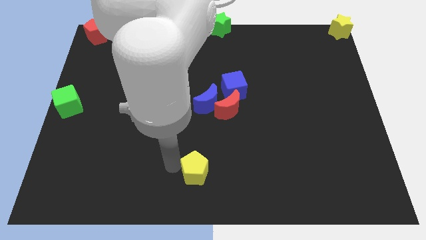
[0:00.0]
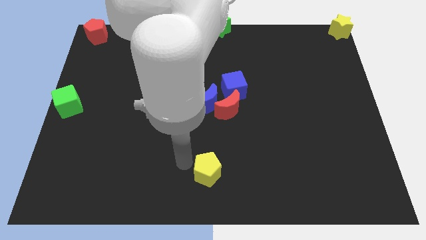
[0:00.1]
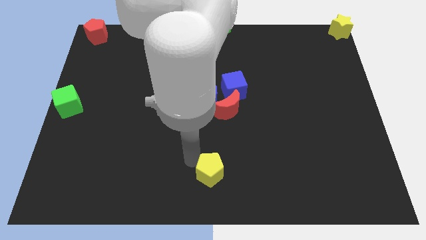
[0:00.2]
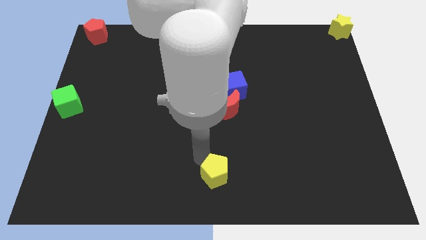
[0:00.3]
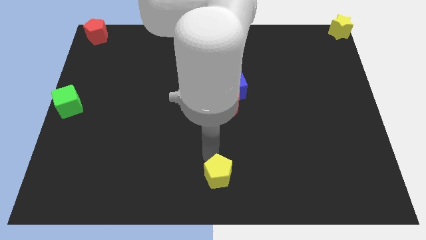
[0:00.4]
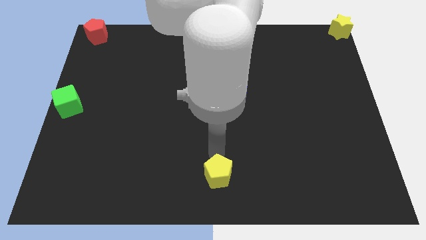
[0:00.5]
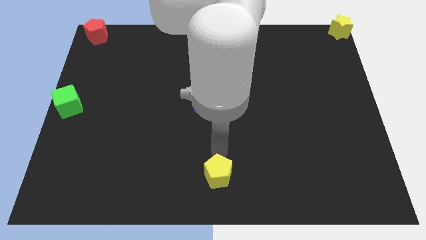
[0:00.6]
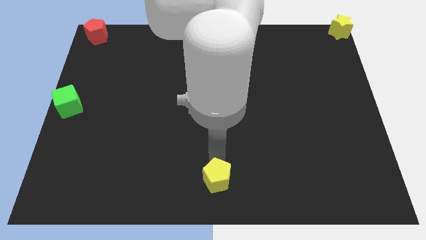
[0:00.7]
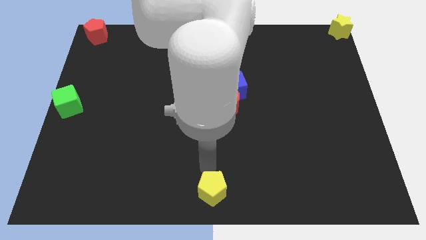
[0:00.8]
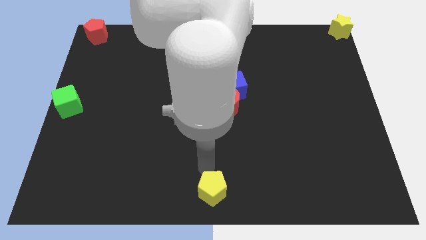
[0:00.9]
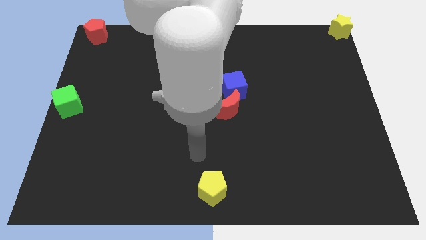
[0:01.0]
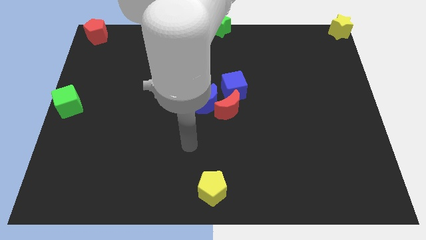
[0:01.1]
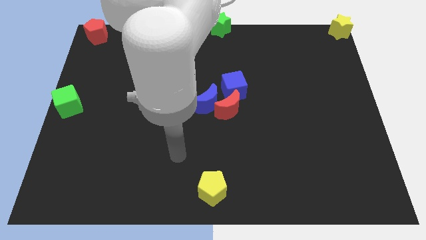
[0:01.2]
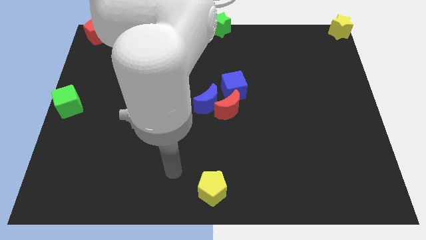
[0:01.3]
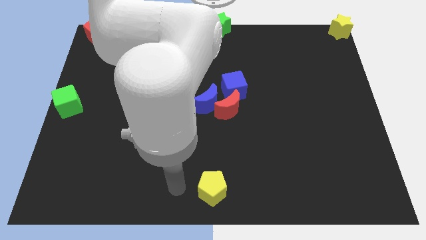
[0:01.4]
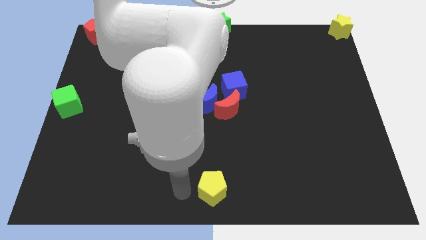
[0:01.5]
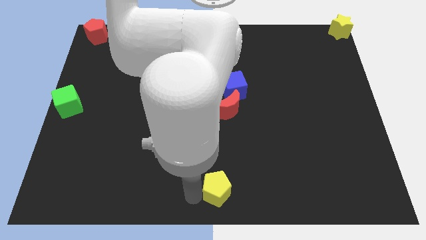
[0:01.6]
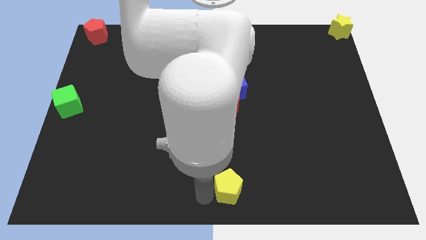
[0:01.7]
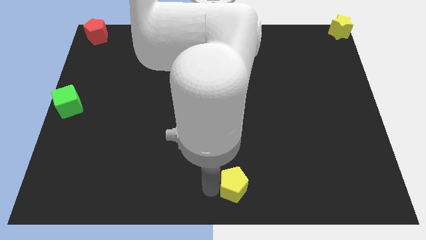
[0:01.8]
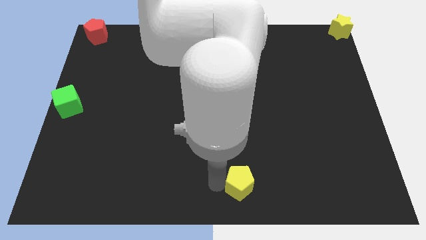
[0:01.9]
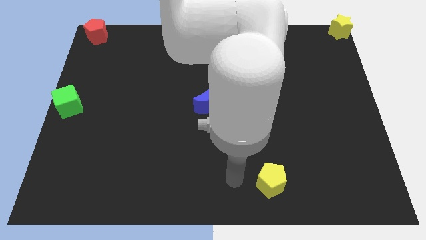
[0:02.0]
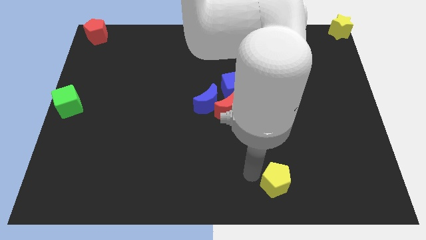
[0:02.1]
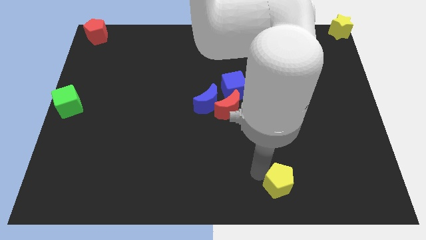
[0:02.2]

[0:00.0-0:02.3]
push the yellow pentagon towards right side of the board

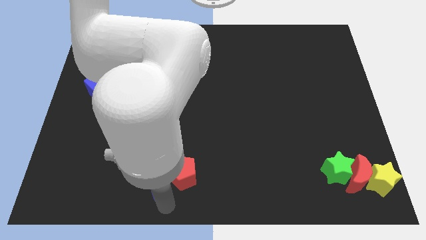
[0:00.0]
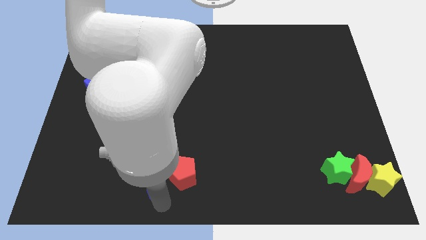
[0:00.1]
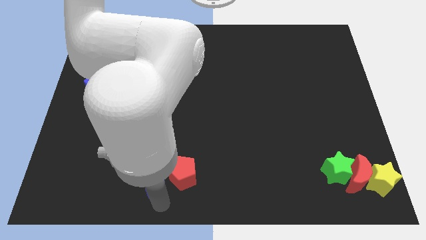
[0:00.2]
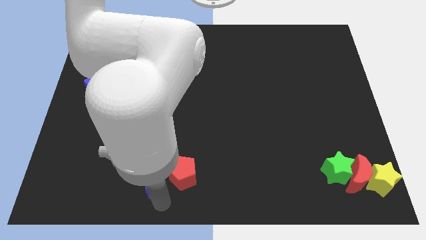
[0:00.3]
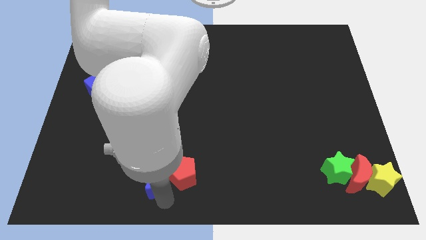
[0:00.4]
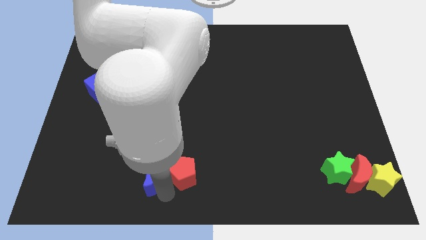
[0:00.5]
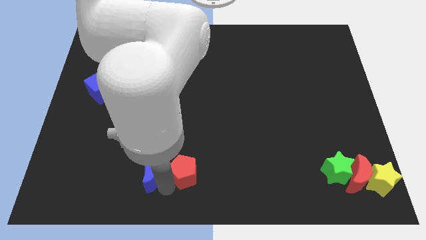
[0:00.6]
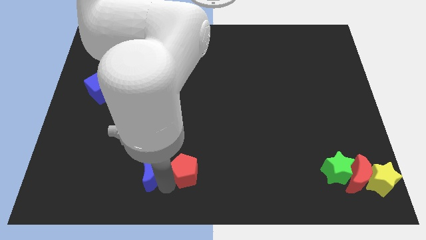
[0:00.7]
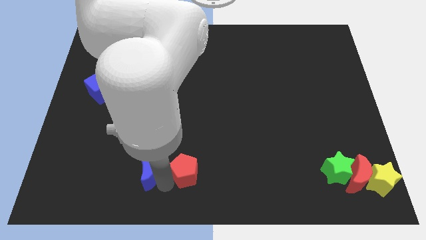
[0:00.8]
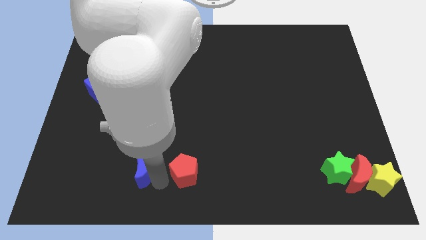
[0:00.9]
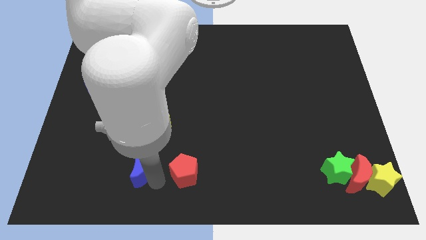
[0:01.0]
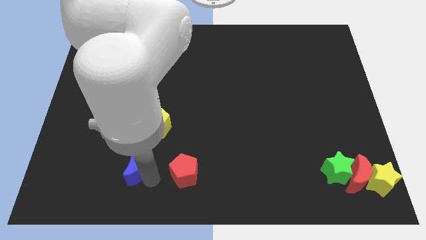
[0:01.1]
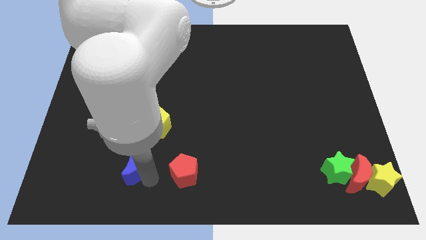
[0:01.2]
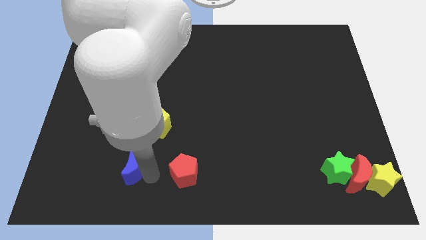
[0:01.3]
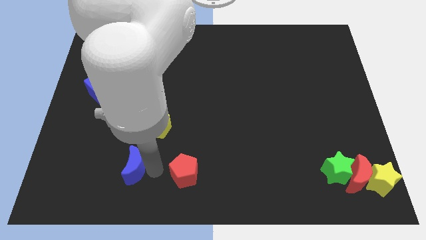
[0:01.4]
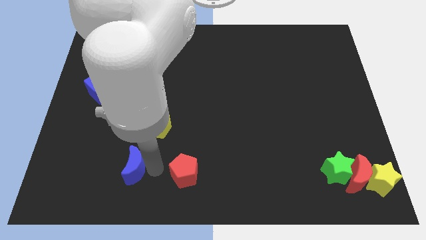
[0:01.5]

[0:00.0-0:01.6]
place blue crescent below yellow pentagon

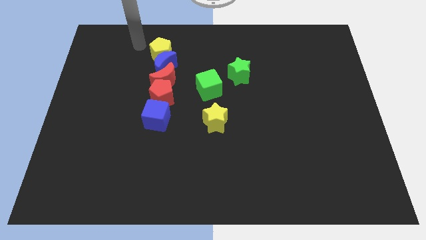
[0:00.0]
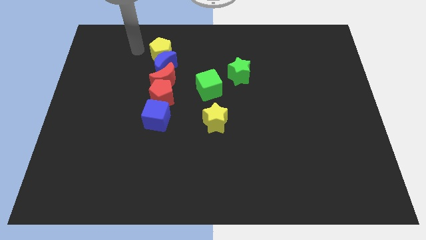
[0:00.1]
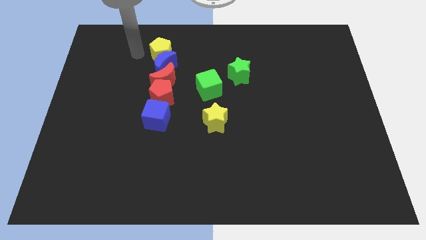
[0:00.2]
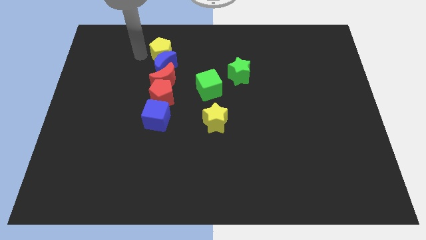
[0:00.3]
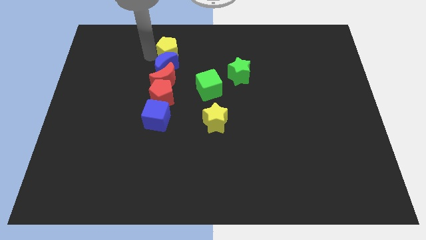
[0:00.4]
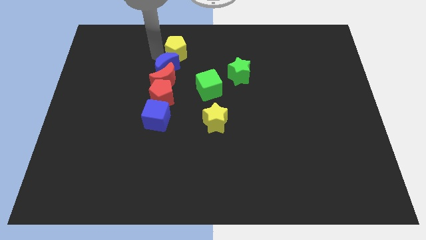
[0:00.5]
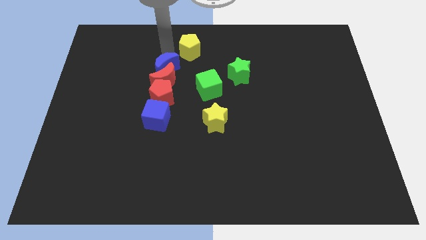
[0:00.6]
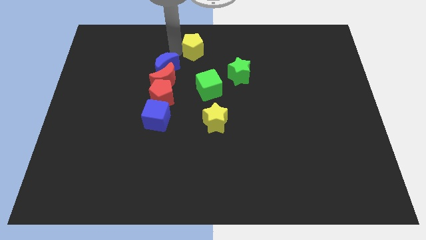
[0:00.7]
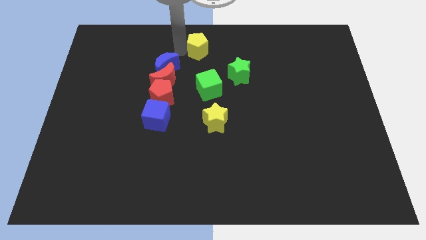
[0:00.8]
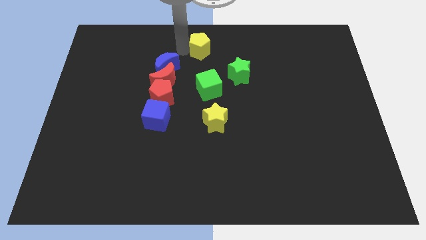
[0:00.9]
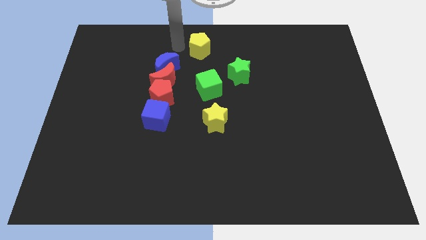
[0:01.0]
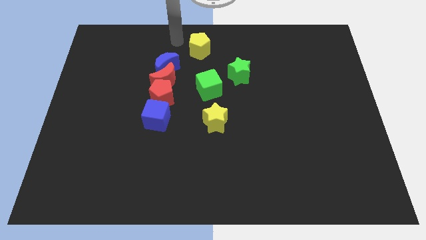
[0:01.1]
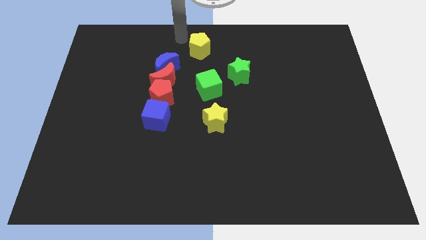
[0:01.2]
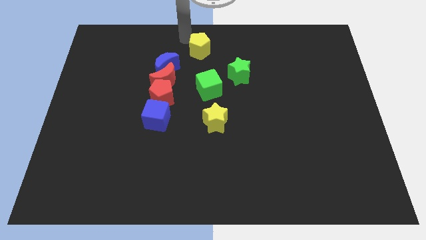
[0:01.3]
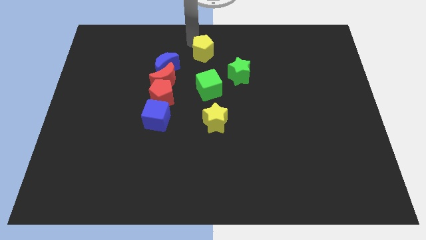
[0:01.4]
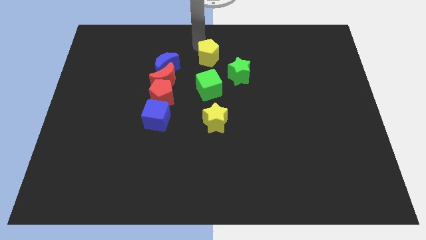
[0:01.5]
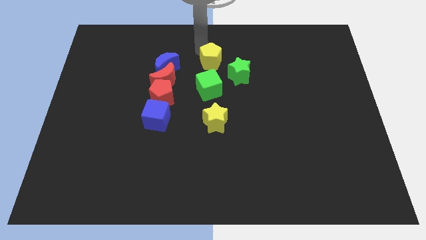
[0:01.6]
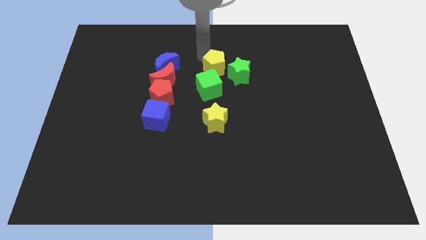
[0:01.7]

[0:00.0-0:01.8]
push the yellow pentagon towards the green star

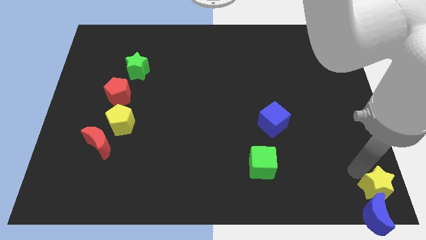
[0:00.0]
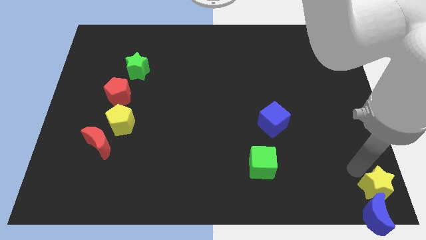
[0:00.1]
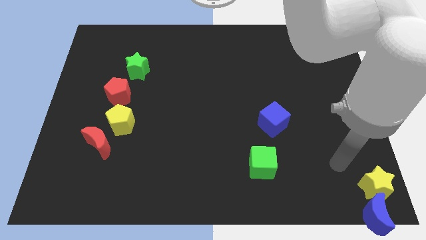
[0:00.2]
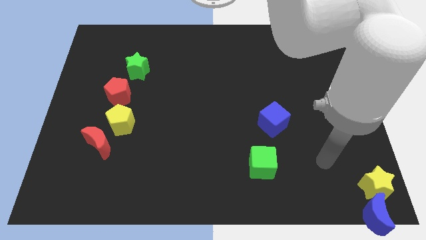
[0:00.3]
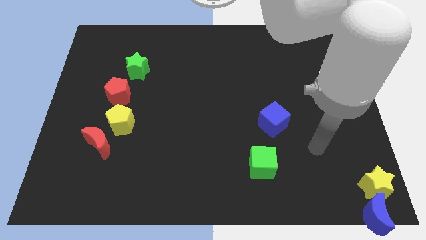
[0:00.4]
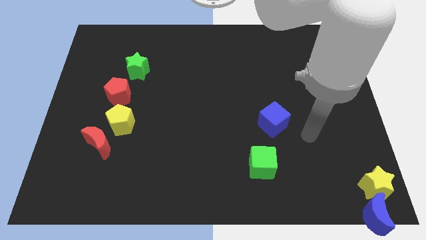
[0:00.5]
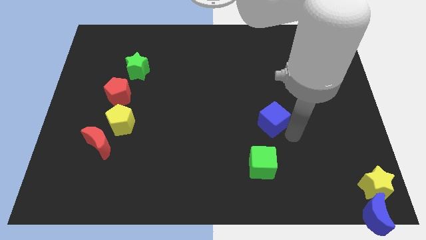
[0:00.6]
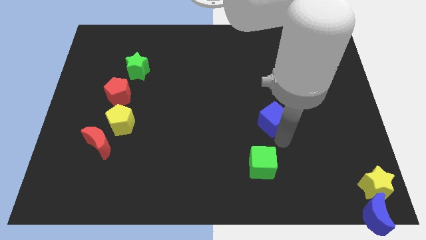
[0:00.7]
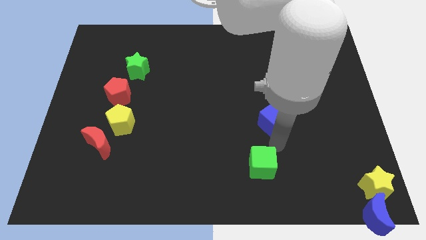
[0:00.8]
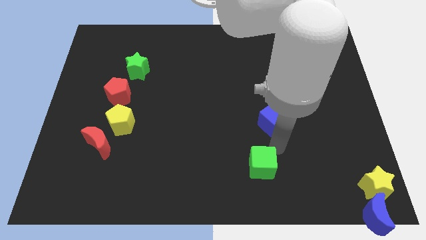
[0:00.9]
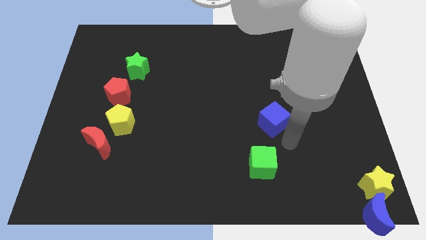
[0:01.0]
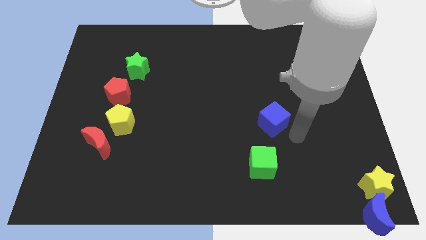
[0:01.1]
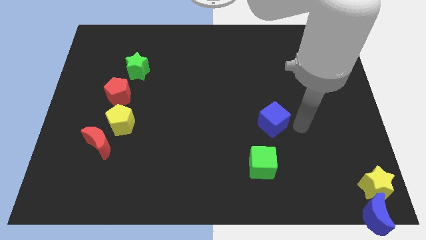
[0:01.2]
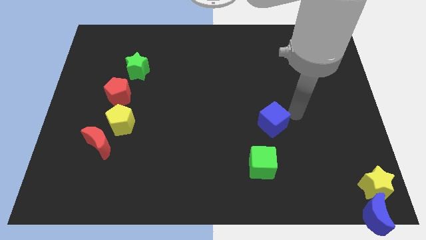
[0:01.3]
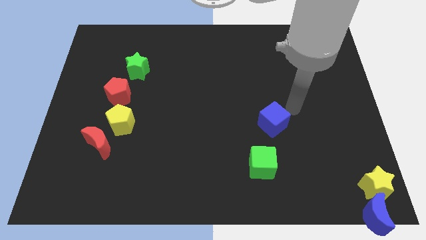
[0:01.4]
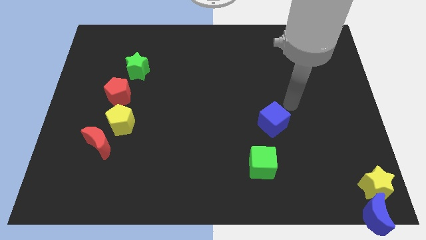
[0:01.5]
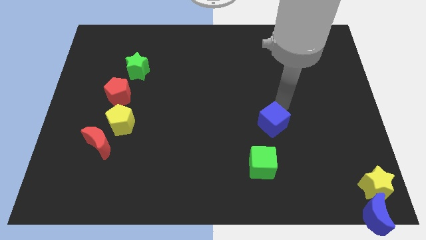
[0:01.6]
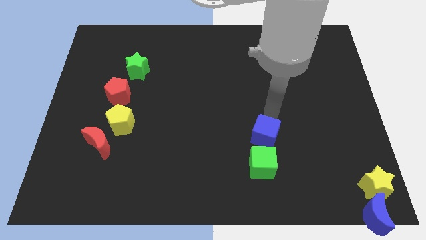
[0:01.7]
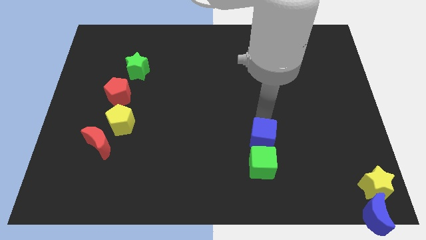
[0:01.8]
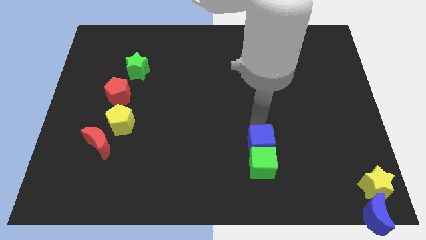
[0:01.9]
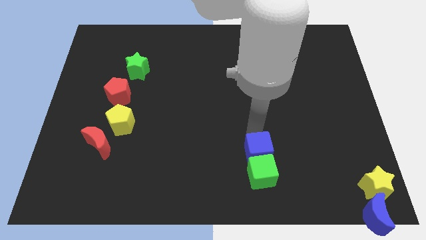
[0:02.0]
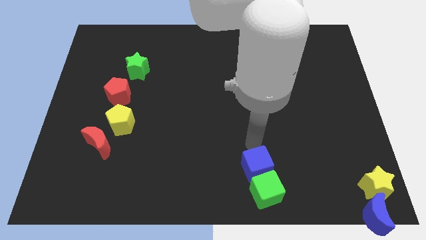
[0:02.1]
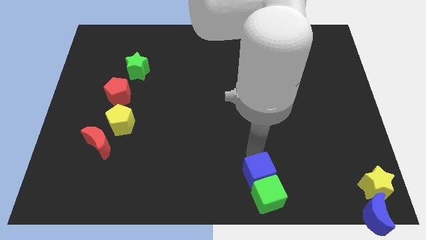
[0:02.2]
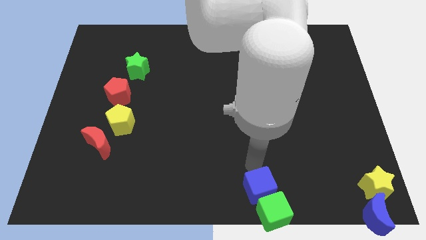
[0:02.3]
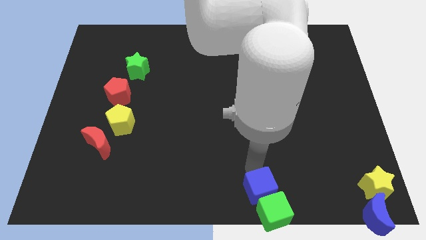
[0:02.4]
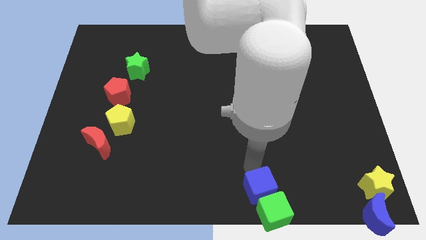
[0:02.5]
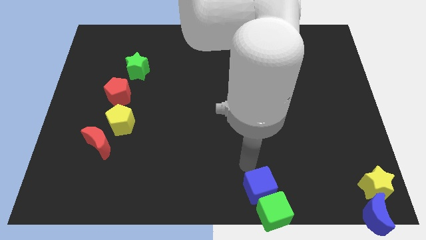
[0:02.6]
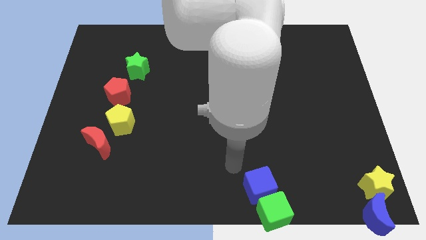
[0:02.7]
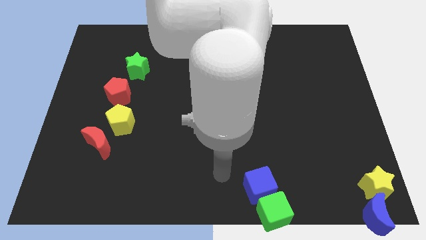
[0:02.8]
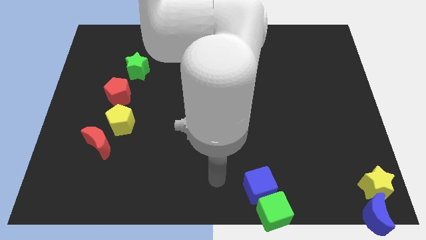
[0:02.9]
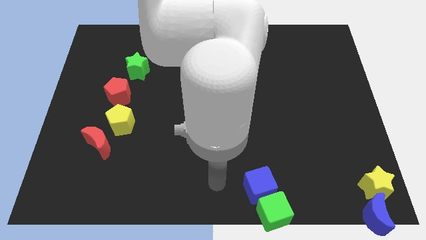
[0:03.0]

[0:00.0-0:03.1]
push the blue cube into the green cube

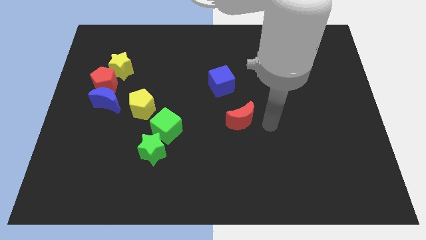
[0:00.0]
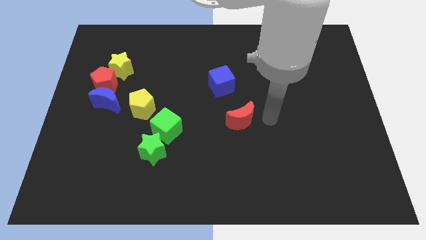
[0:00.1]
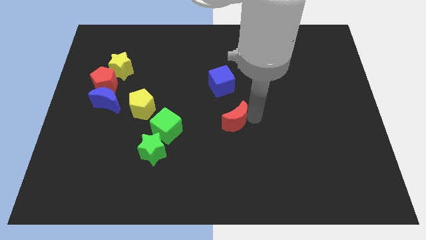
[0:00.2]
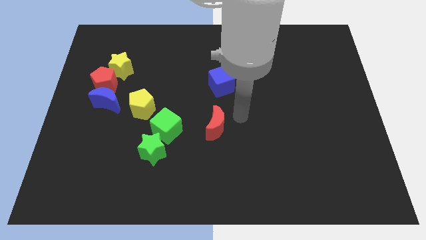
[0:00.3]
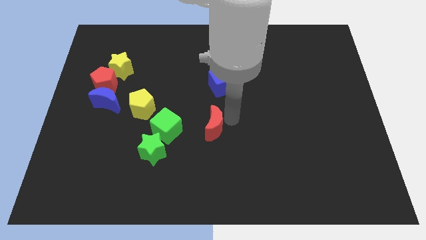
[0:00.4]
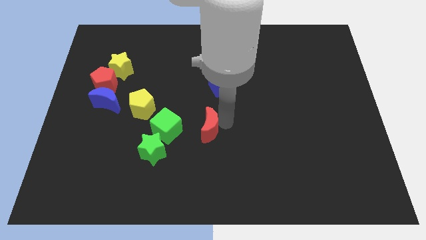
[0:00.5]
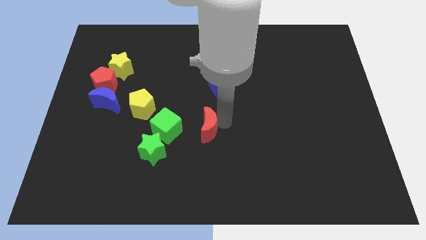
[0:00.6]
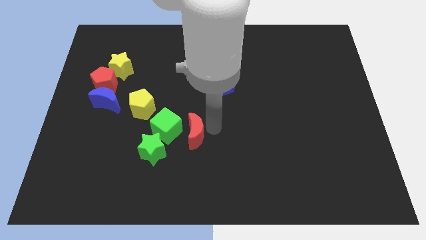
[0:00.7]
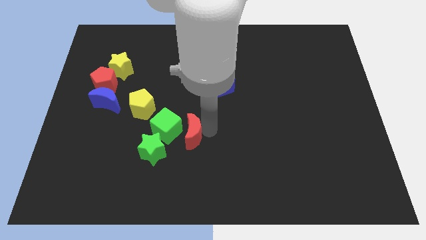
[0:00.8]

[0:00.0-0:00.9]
place the red crescent to the right side of green cube
